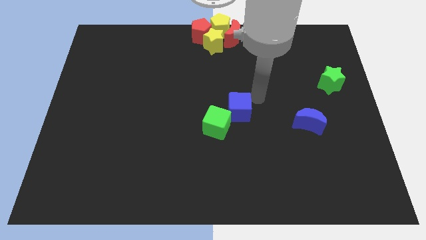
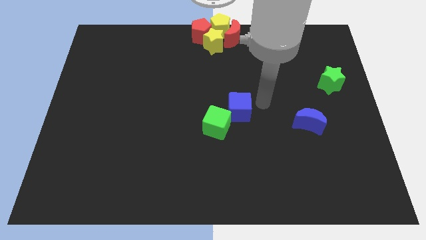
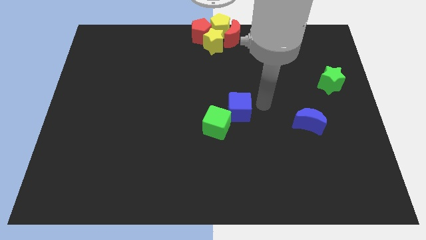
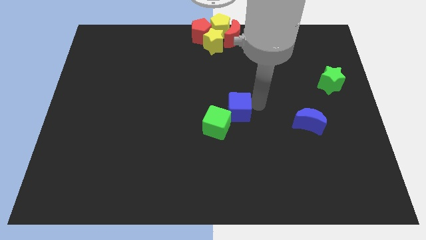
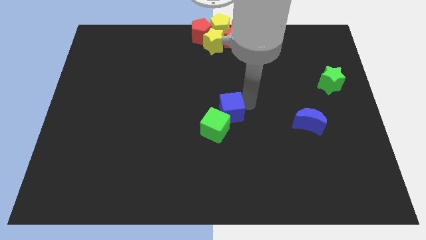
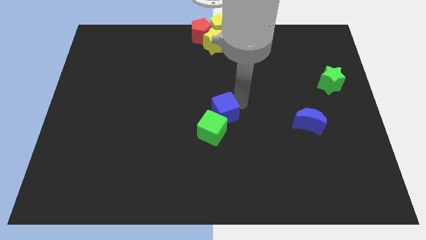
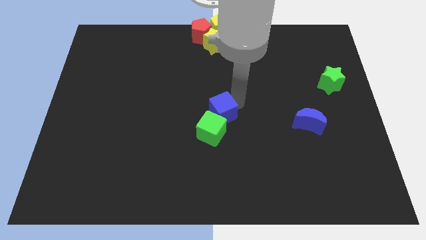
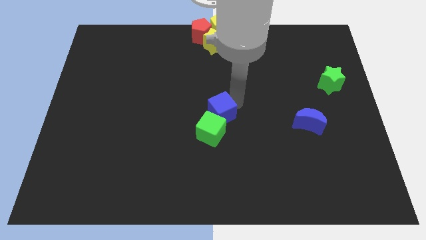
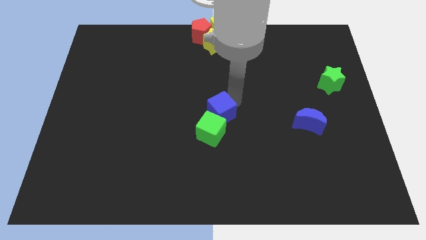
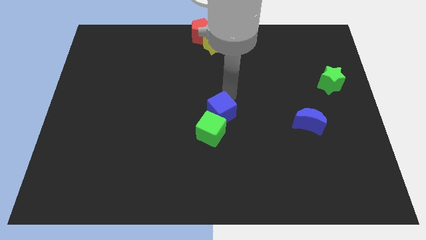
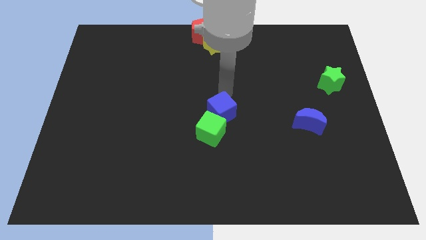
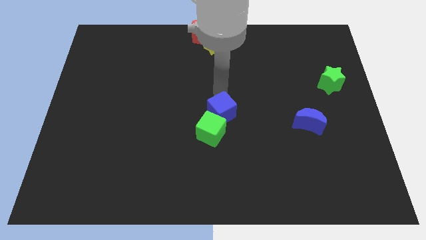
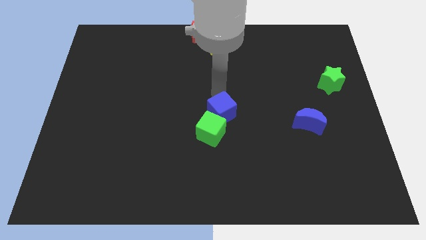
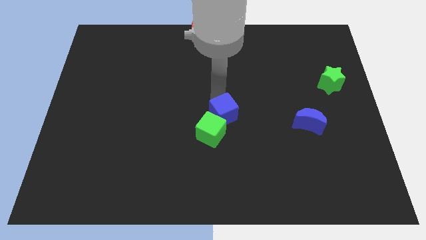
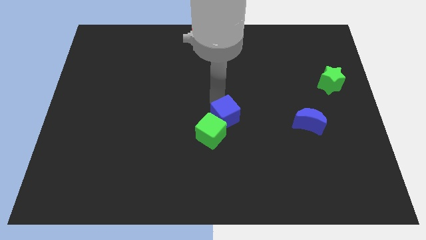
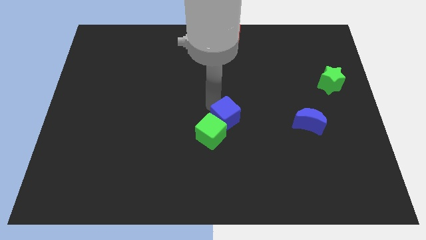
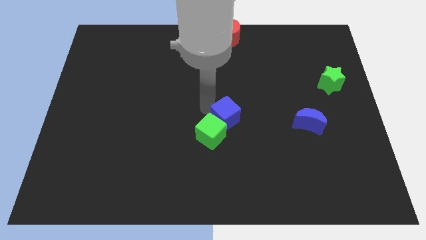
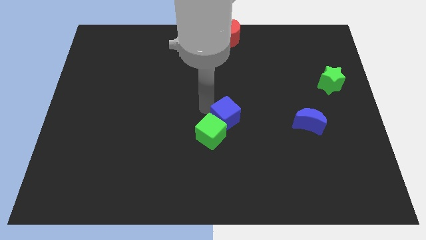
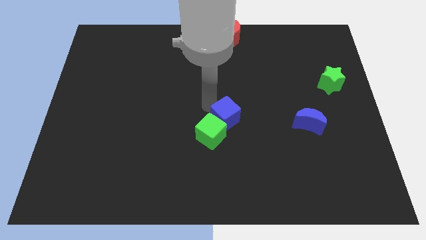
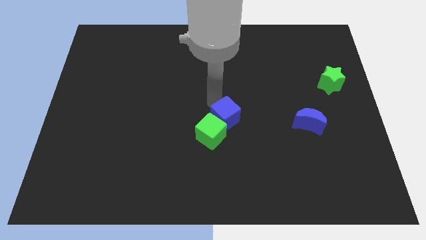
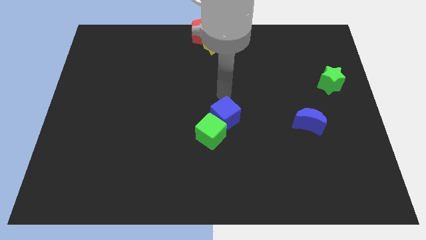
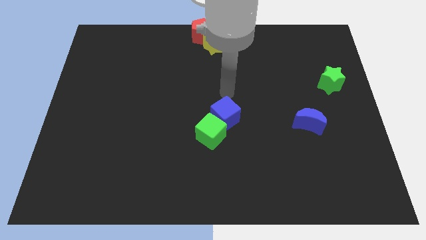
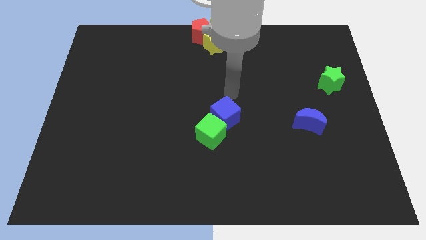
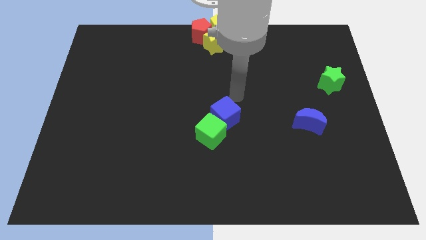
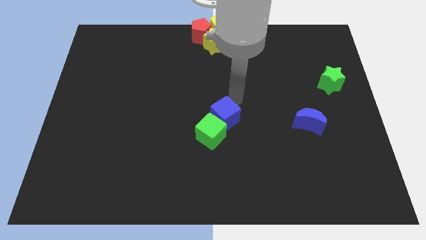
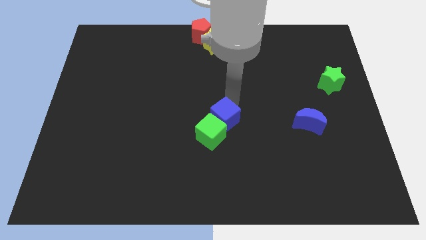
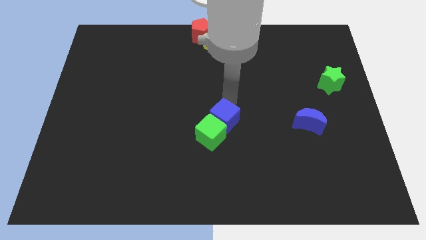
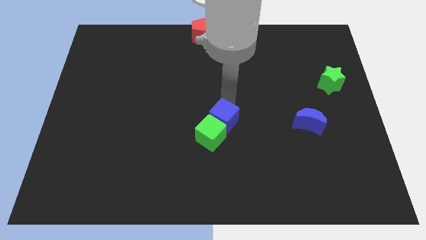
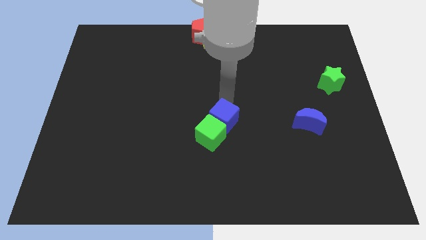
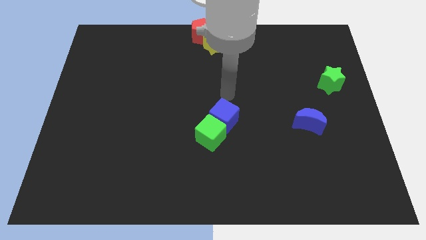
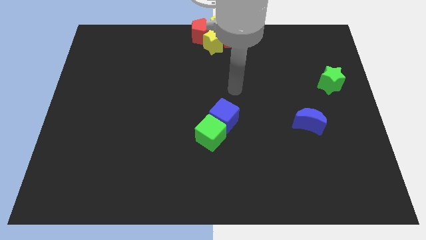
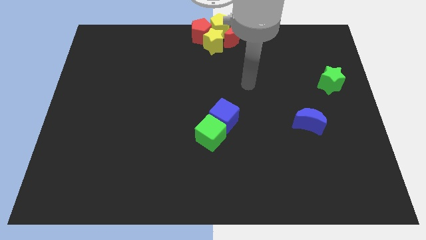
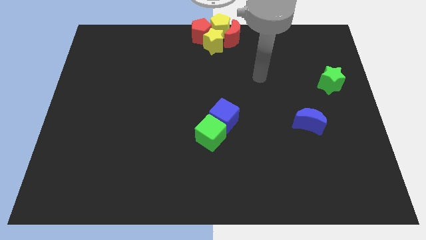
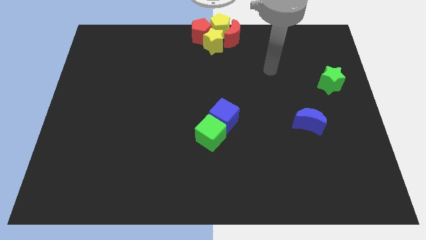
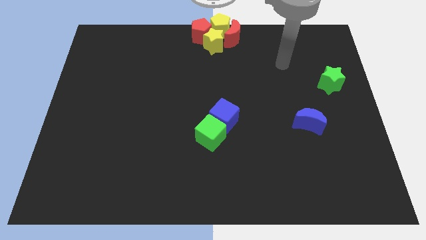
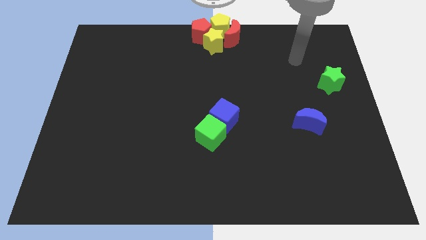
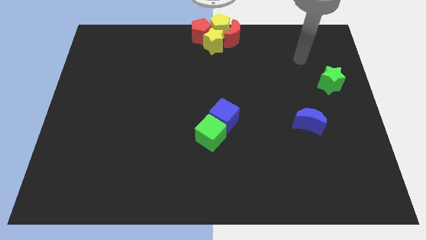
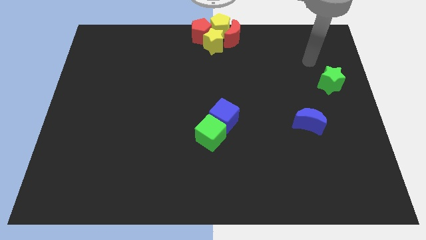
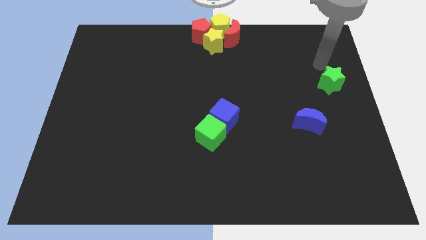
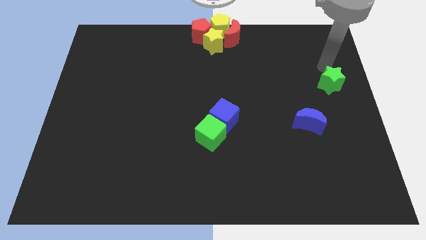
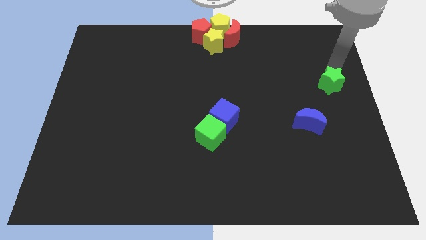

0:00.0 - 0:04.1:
adjust the blue cube and green cube

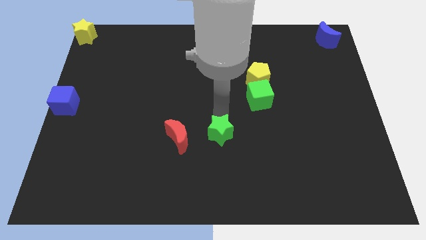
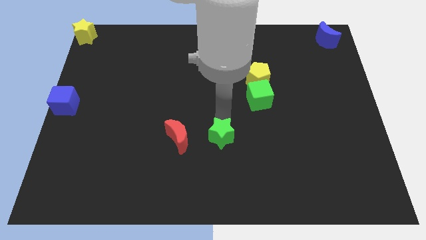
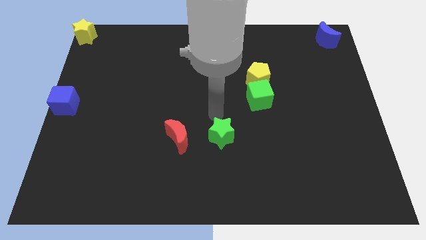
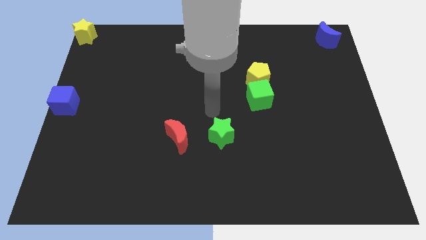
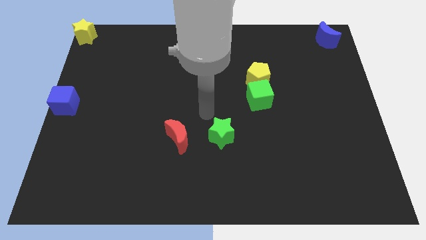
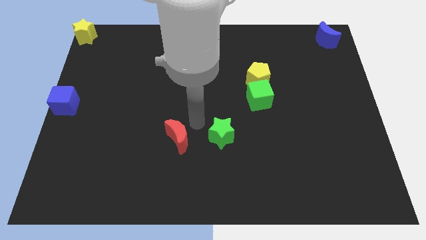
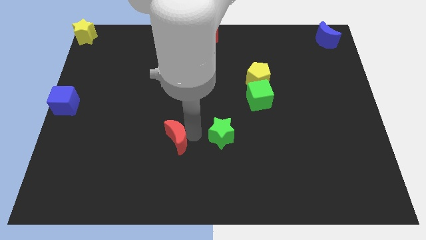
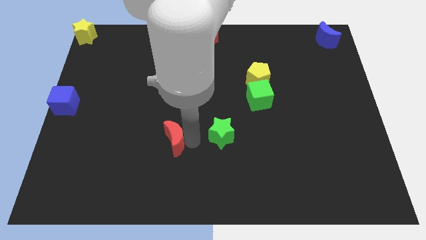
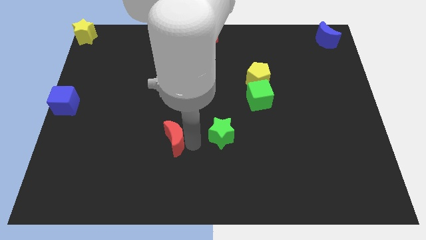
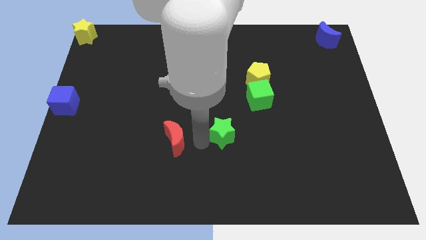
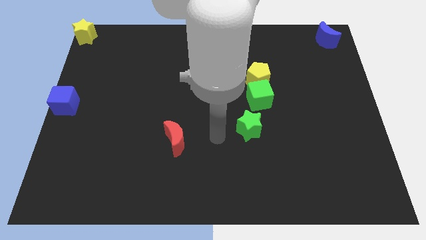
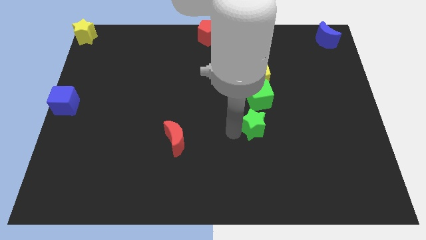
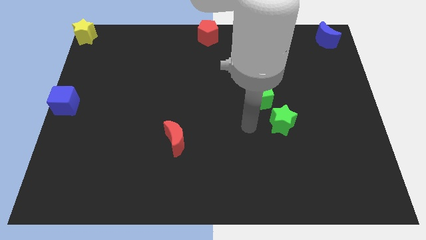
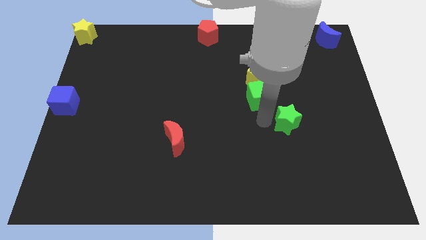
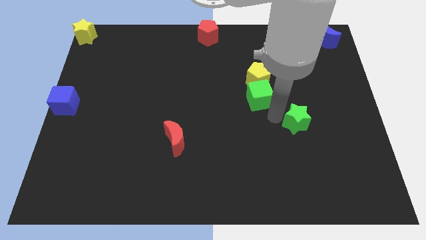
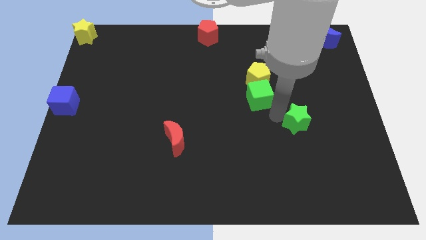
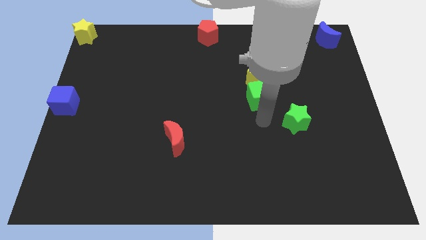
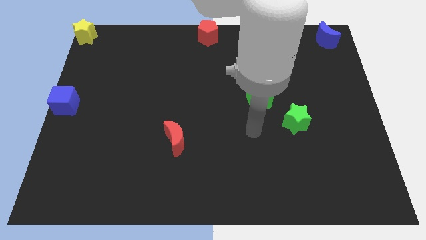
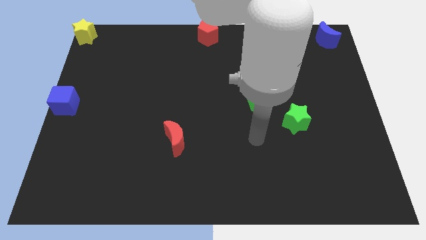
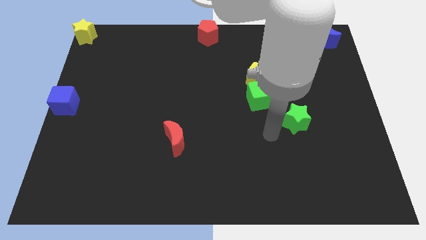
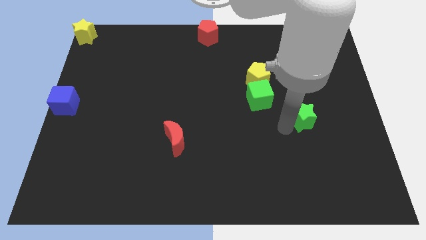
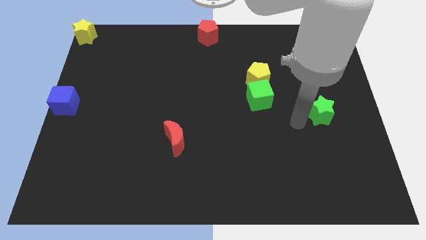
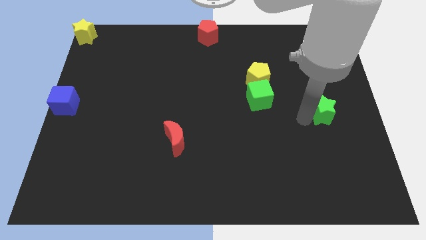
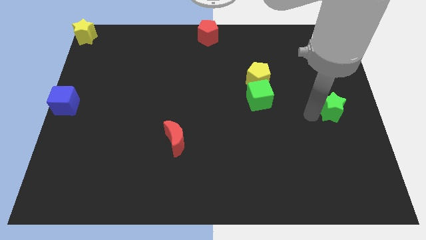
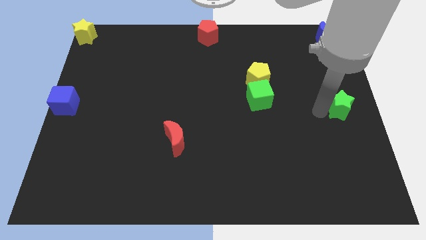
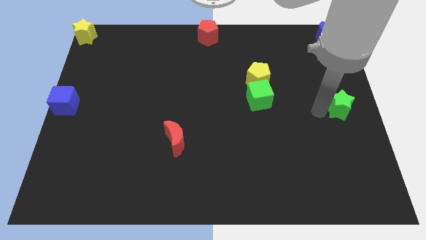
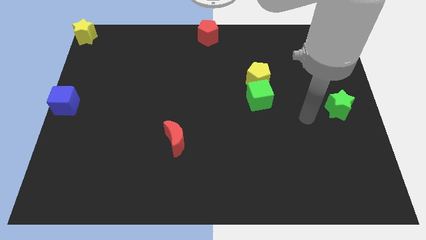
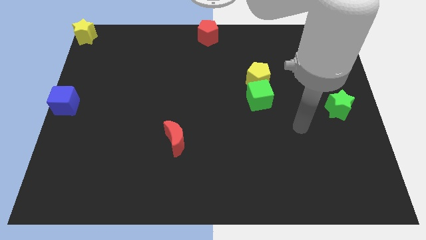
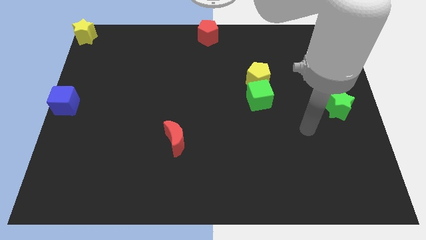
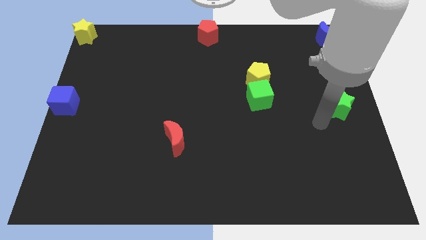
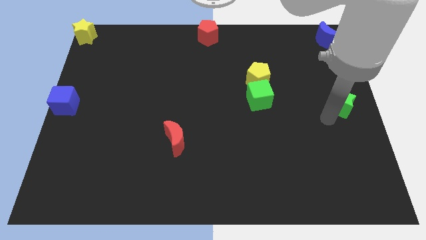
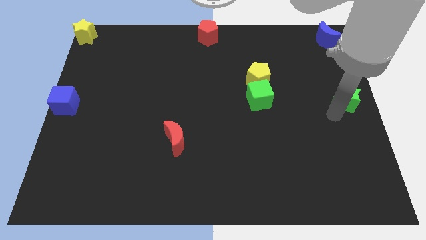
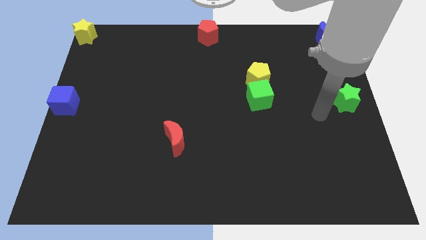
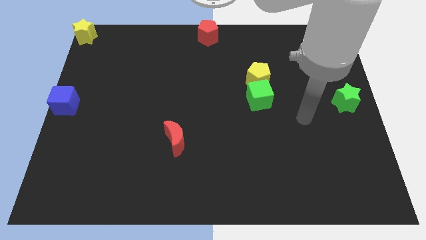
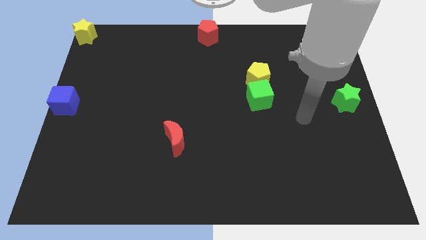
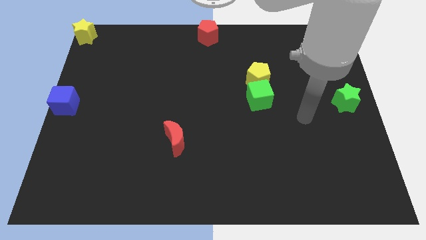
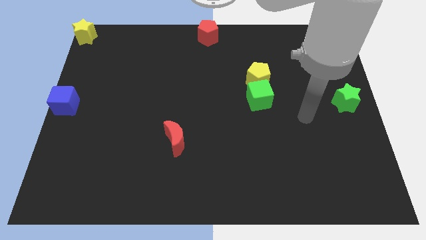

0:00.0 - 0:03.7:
move the green star at the center right

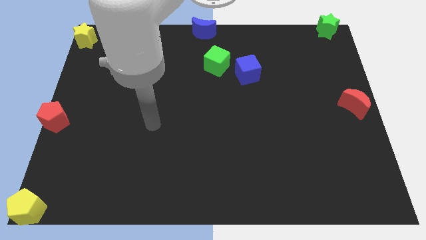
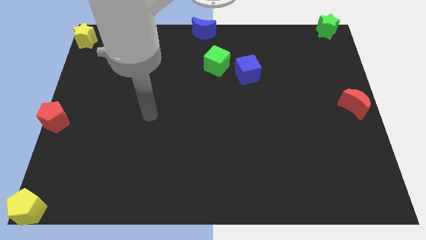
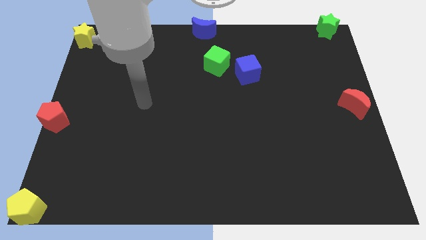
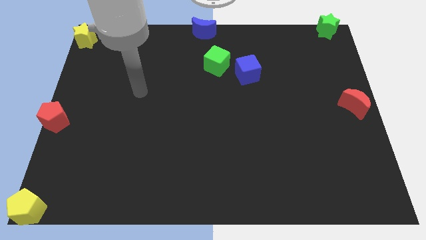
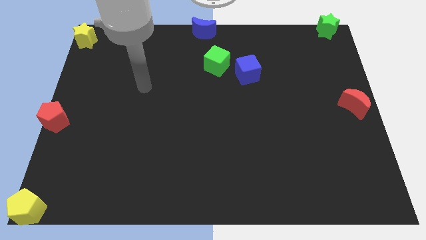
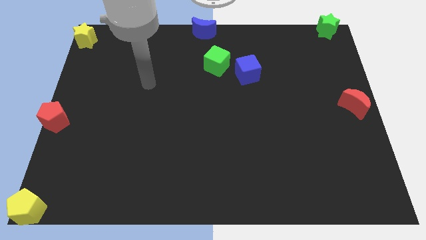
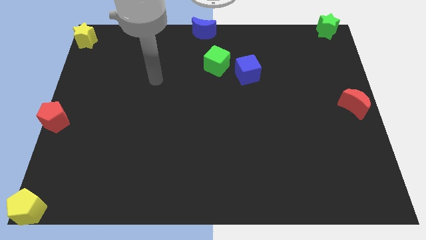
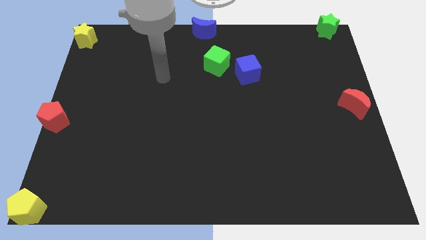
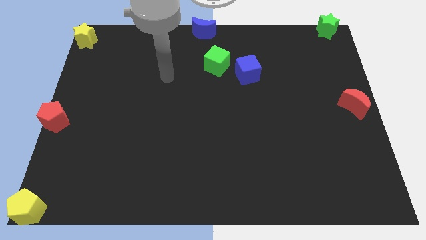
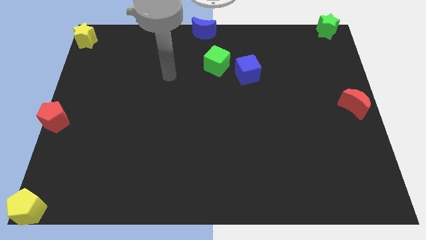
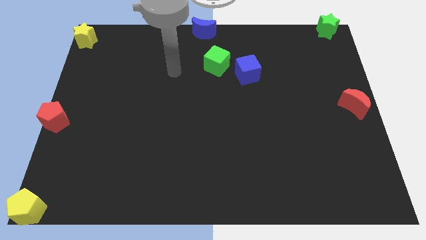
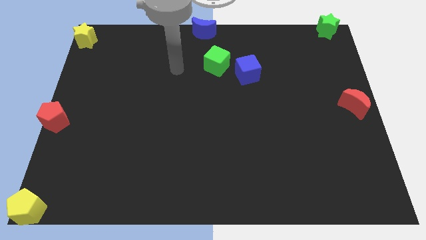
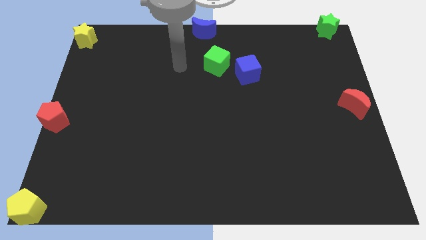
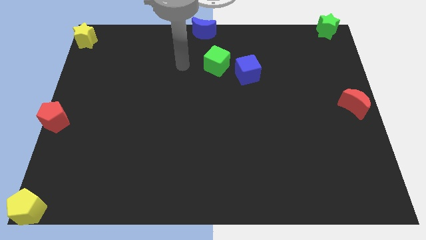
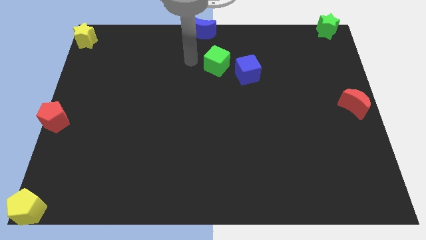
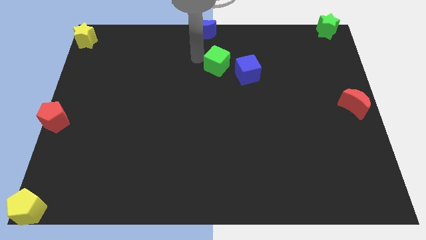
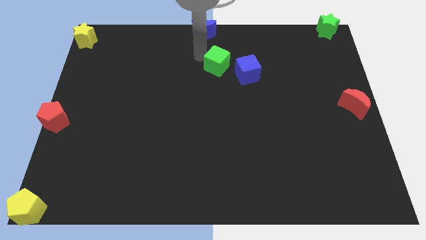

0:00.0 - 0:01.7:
point your arm towards the left side of the green cube
